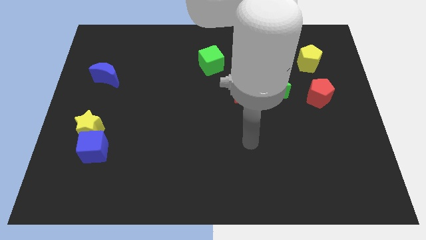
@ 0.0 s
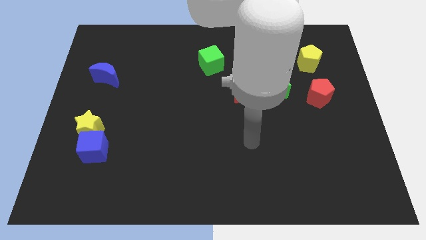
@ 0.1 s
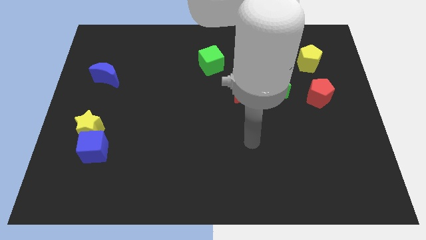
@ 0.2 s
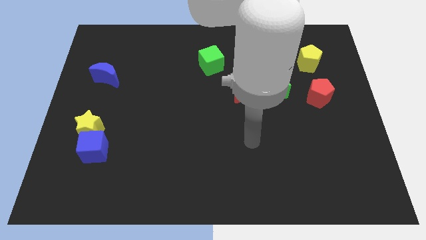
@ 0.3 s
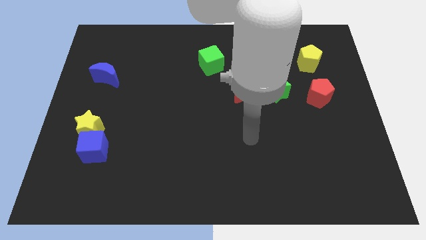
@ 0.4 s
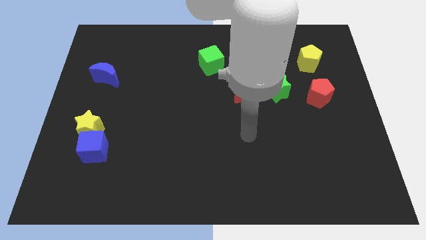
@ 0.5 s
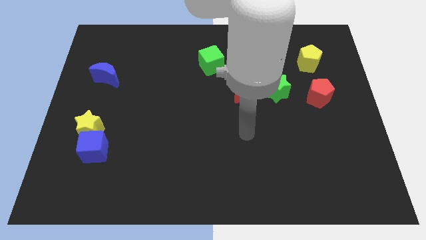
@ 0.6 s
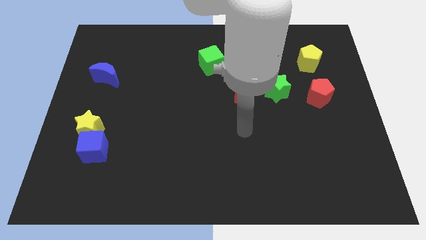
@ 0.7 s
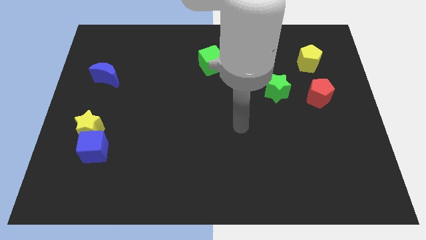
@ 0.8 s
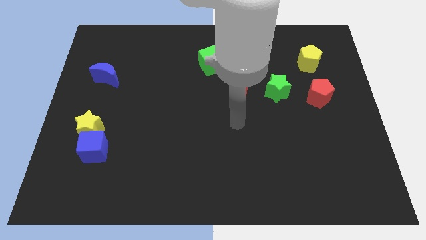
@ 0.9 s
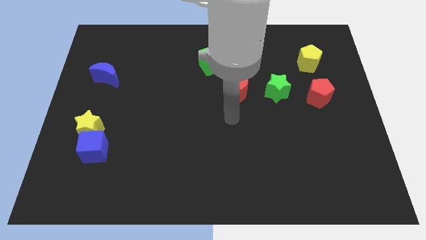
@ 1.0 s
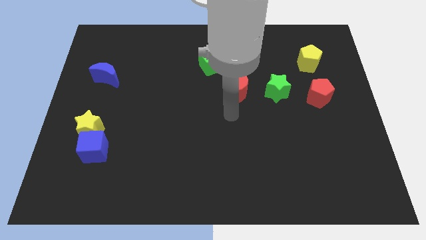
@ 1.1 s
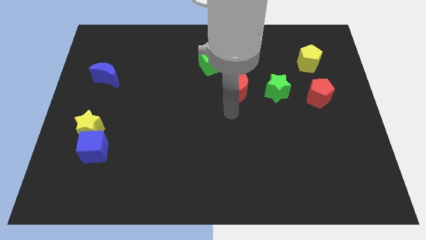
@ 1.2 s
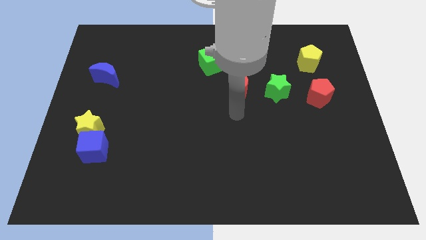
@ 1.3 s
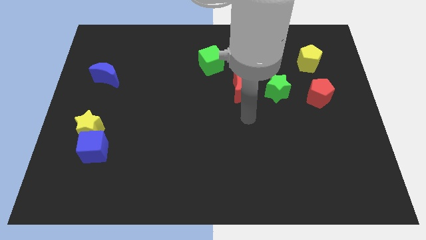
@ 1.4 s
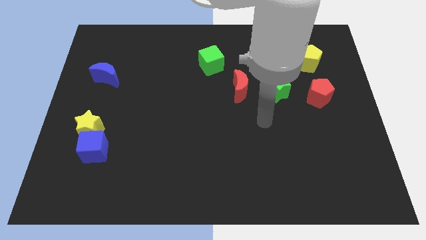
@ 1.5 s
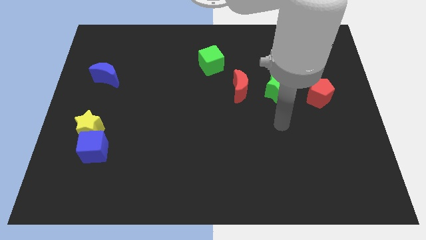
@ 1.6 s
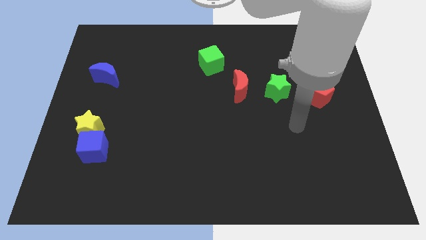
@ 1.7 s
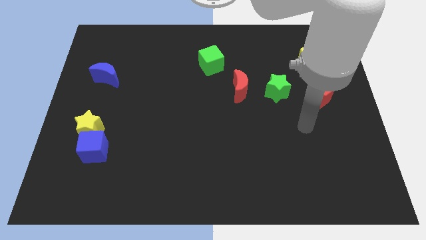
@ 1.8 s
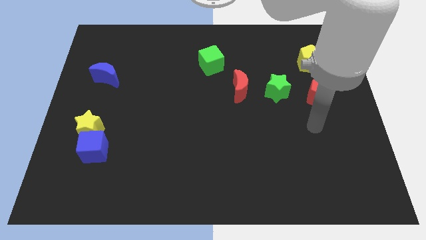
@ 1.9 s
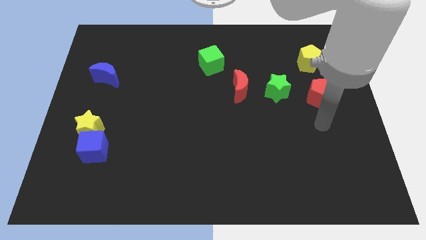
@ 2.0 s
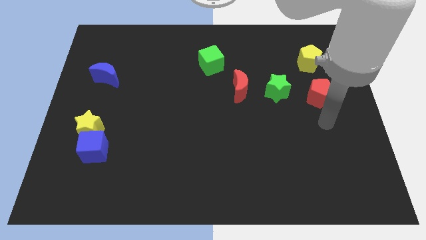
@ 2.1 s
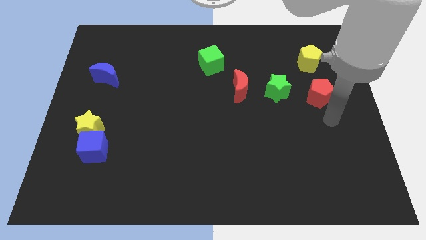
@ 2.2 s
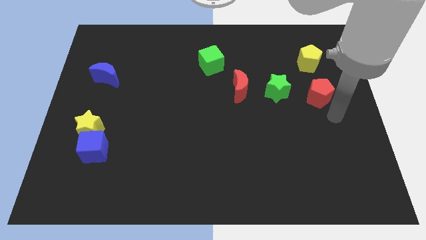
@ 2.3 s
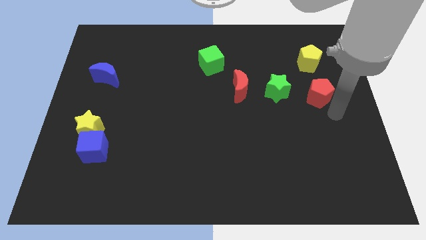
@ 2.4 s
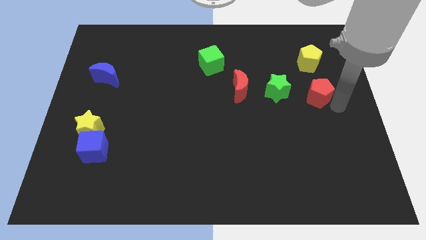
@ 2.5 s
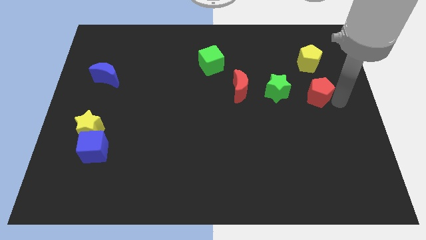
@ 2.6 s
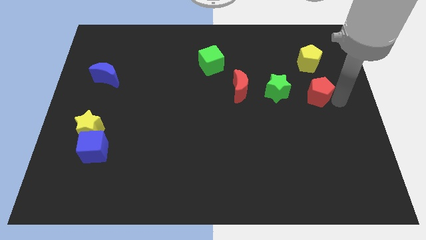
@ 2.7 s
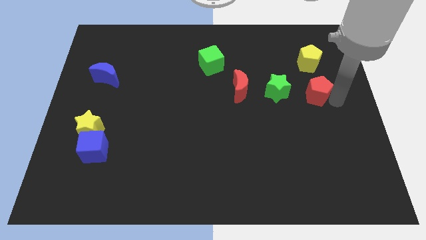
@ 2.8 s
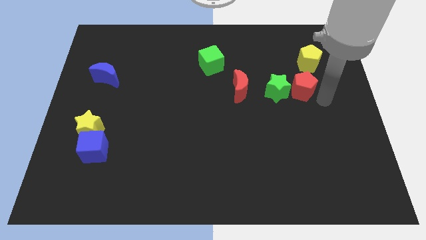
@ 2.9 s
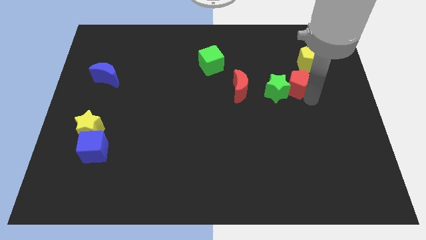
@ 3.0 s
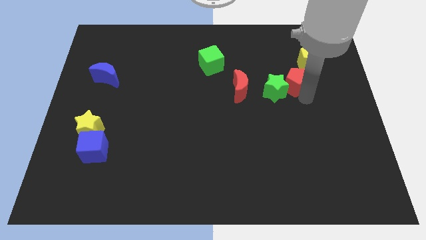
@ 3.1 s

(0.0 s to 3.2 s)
move the red pentagon into the green star

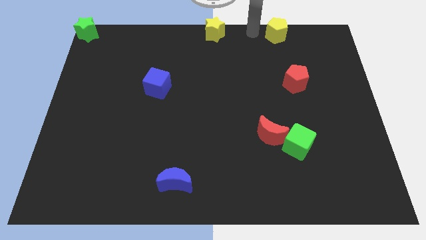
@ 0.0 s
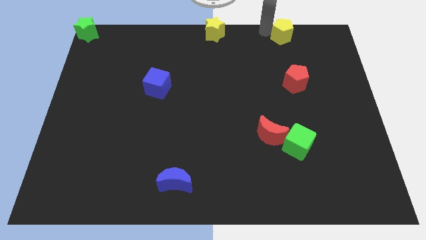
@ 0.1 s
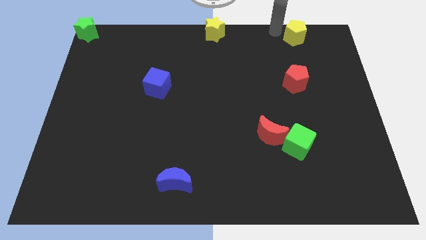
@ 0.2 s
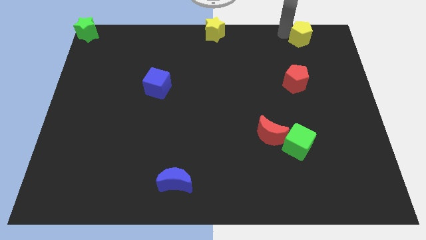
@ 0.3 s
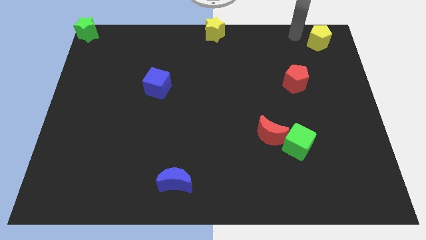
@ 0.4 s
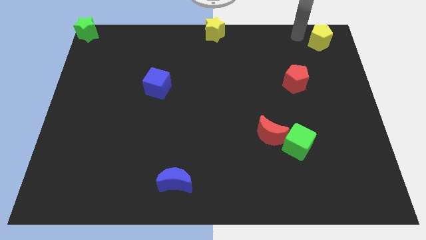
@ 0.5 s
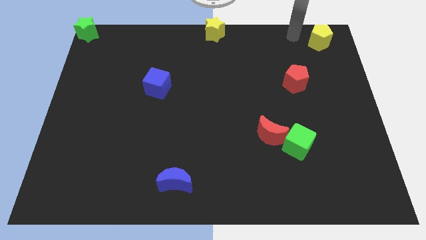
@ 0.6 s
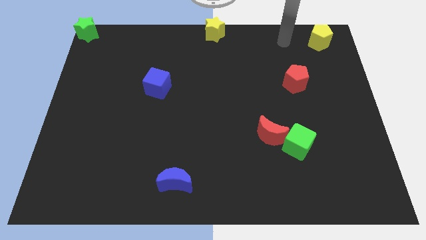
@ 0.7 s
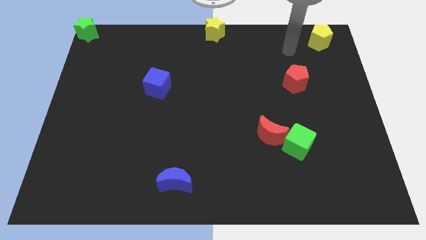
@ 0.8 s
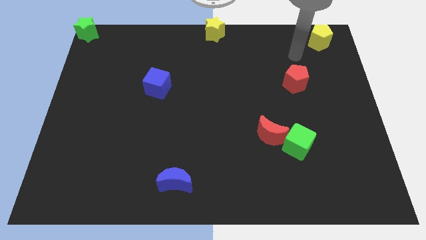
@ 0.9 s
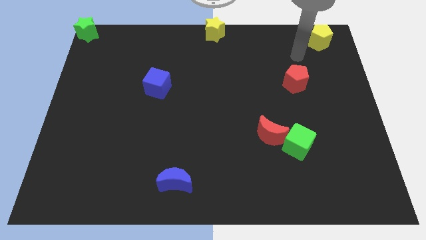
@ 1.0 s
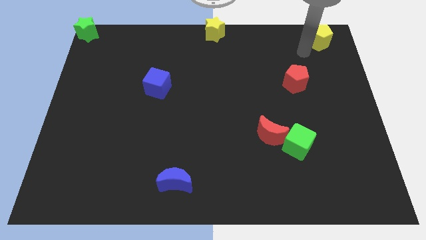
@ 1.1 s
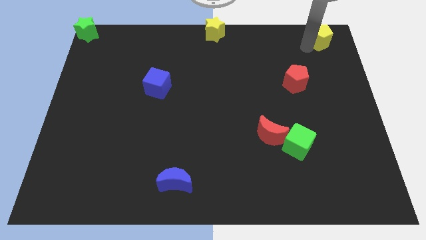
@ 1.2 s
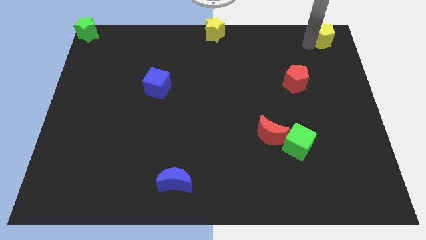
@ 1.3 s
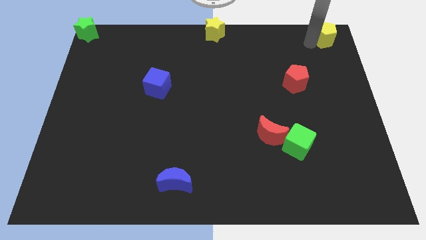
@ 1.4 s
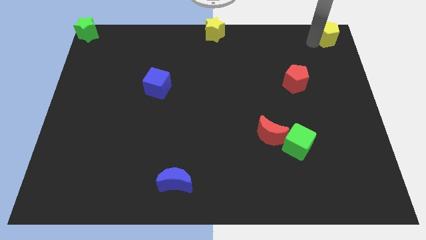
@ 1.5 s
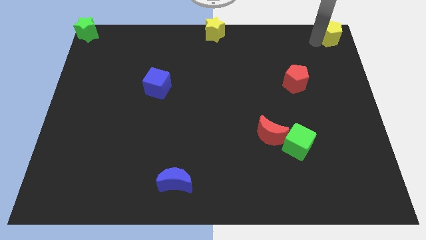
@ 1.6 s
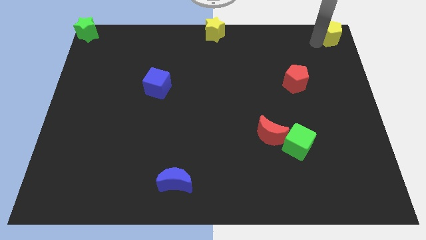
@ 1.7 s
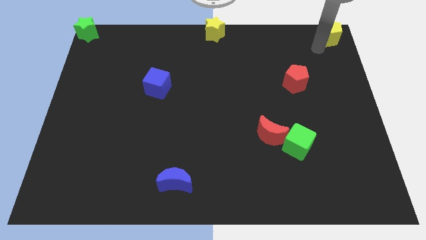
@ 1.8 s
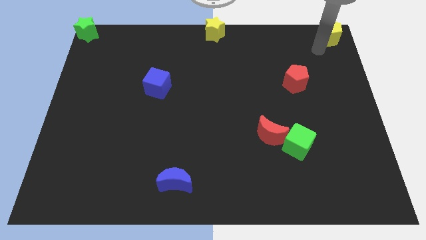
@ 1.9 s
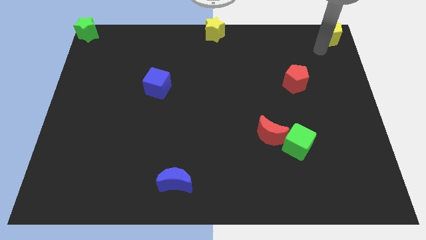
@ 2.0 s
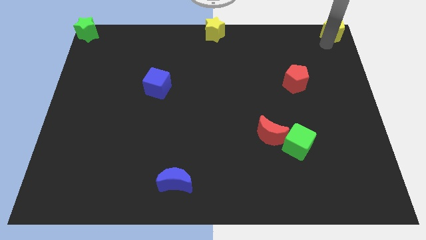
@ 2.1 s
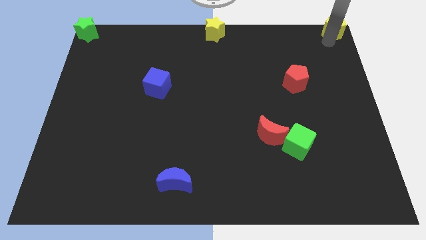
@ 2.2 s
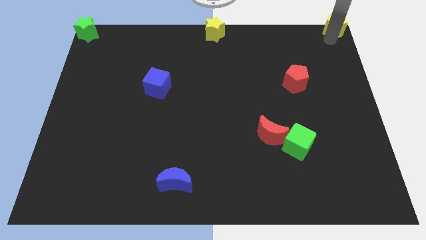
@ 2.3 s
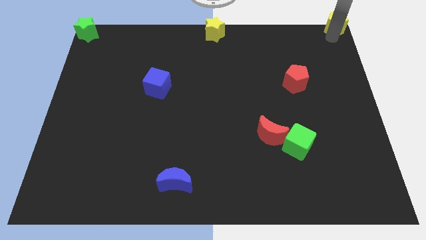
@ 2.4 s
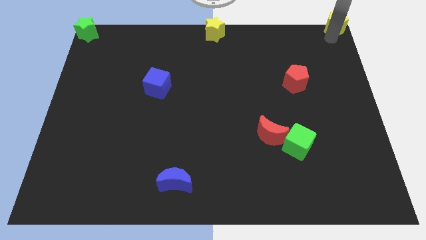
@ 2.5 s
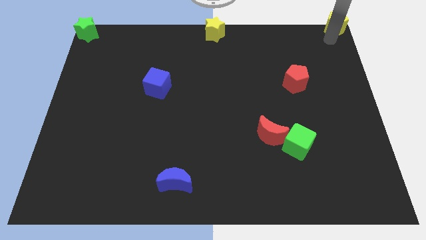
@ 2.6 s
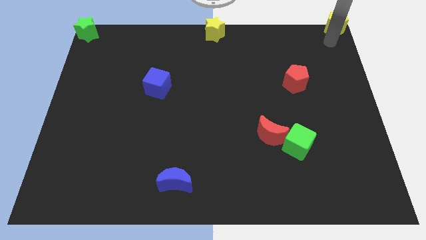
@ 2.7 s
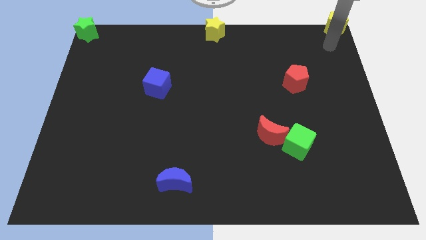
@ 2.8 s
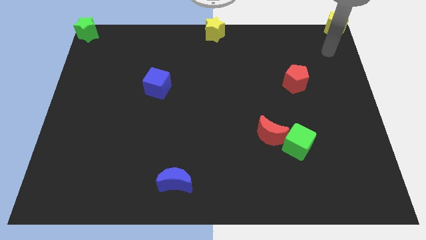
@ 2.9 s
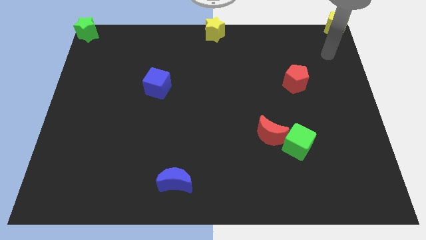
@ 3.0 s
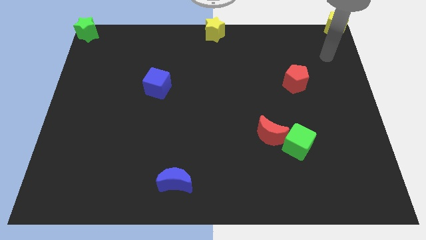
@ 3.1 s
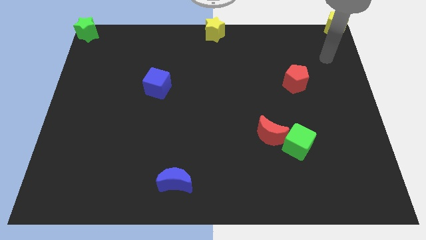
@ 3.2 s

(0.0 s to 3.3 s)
push yellow pentagon to top right corner of the board

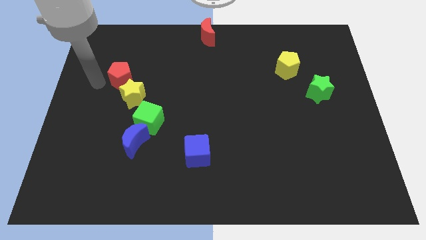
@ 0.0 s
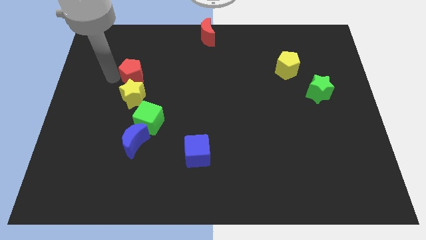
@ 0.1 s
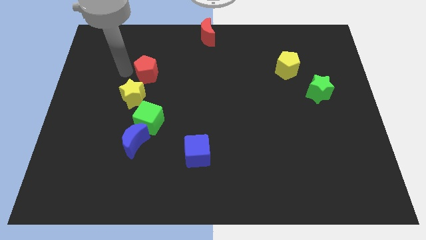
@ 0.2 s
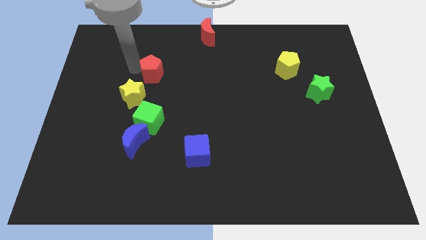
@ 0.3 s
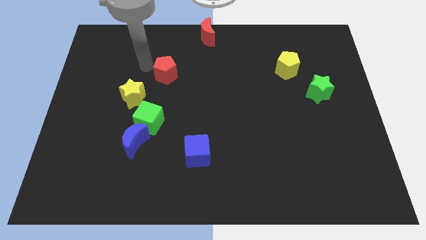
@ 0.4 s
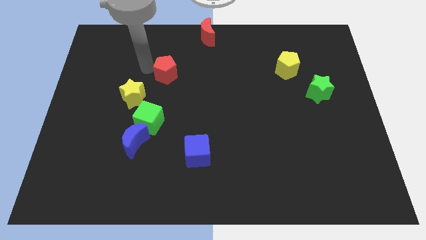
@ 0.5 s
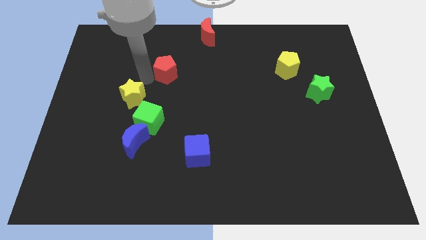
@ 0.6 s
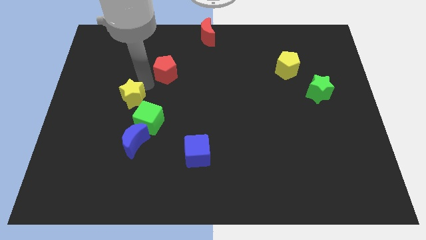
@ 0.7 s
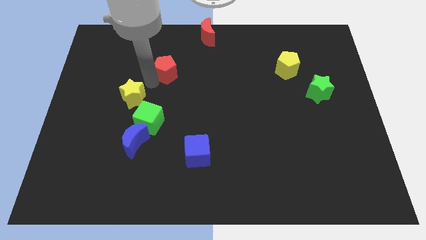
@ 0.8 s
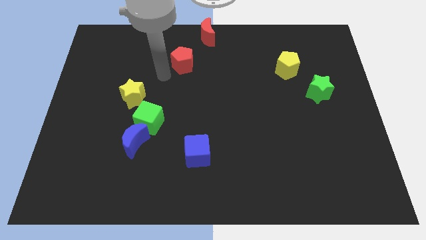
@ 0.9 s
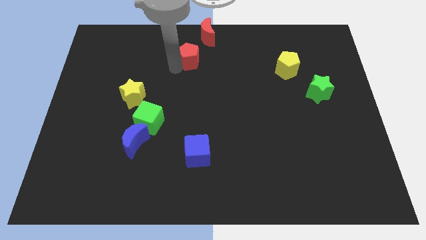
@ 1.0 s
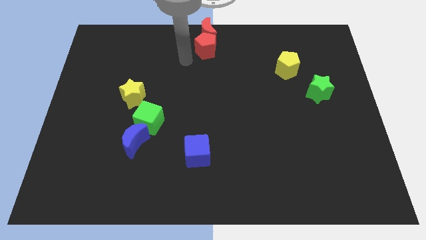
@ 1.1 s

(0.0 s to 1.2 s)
move red pentagon left below red moon

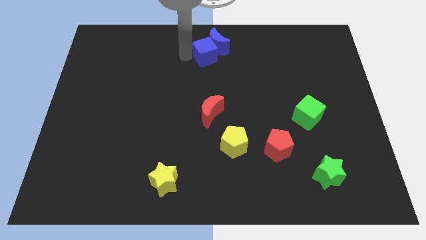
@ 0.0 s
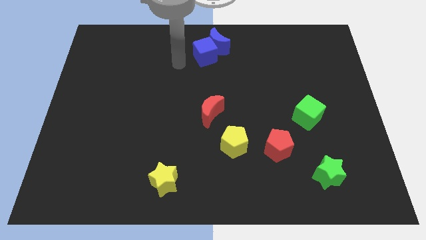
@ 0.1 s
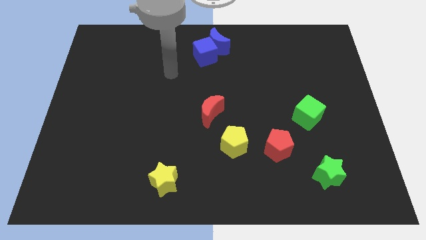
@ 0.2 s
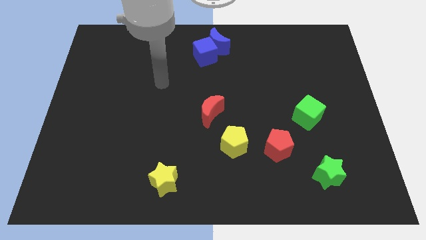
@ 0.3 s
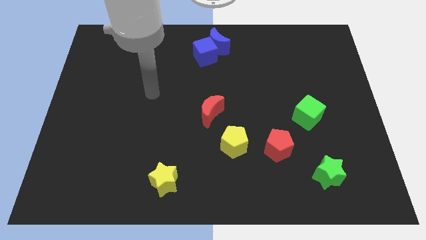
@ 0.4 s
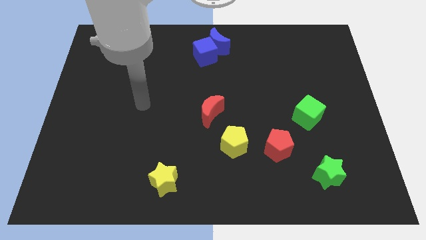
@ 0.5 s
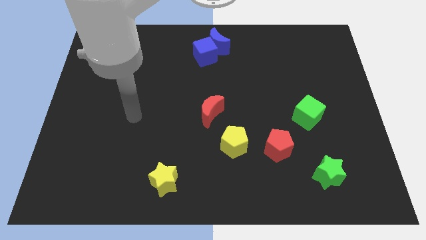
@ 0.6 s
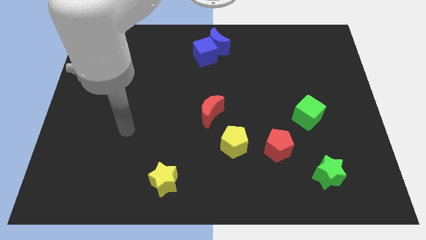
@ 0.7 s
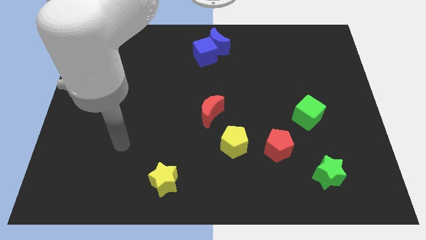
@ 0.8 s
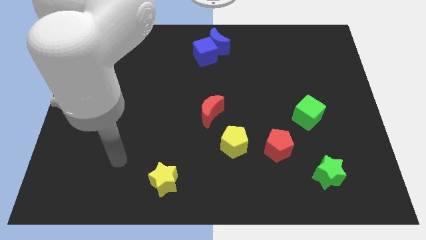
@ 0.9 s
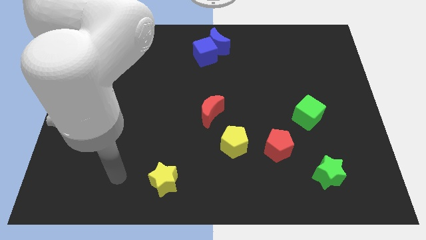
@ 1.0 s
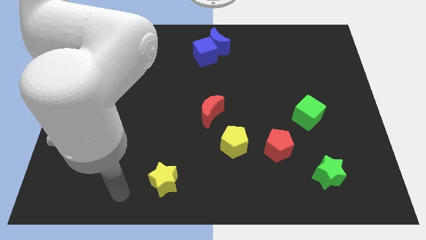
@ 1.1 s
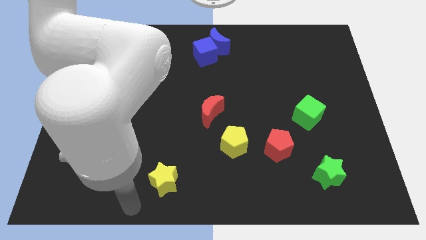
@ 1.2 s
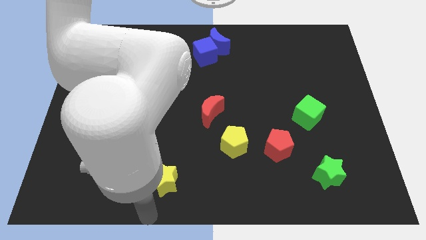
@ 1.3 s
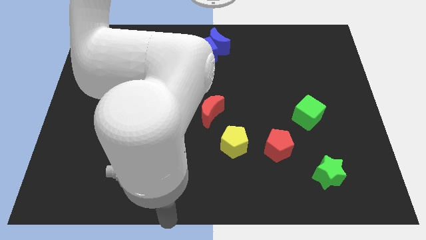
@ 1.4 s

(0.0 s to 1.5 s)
place your arm below the yellow star
